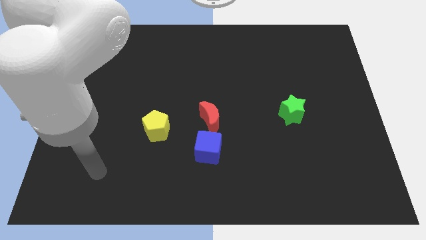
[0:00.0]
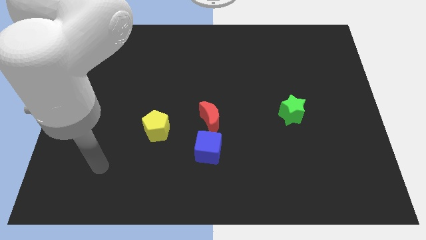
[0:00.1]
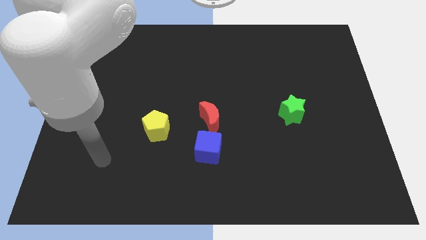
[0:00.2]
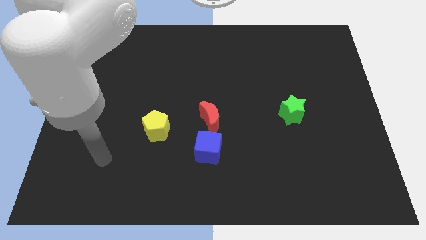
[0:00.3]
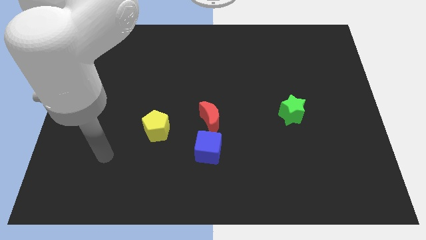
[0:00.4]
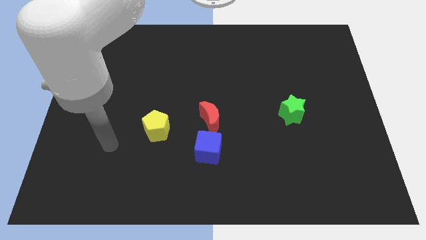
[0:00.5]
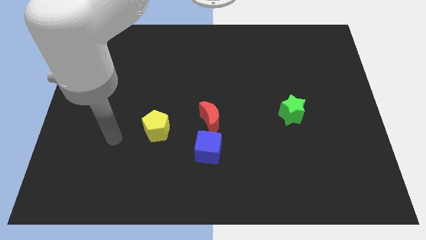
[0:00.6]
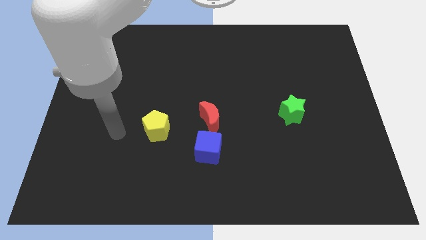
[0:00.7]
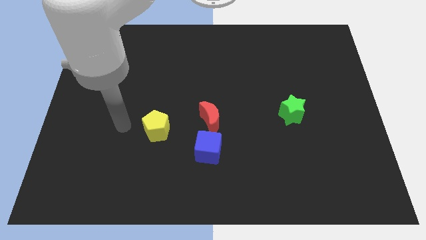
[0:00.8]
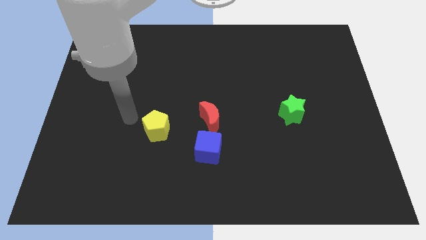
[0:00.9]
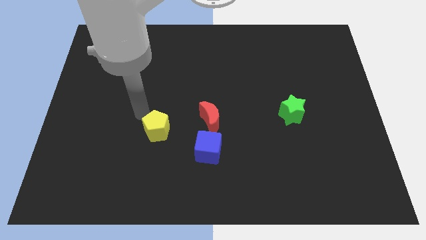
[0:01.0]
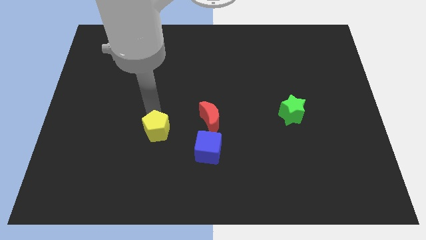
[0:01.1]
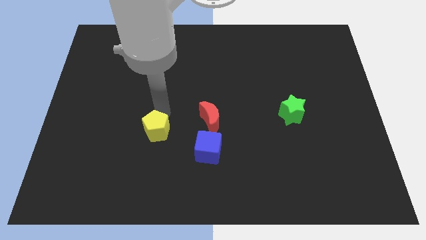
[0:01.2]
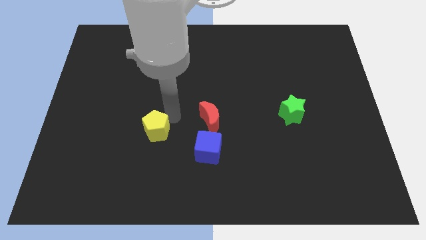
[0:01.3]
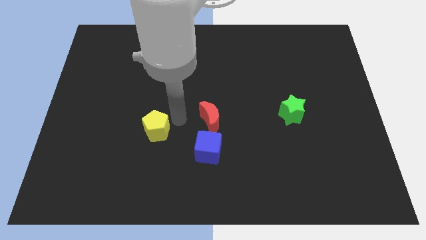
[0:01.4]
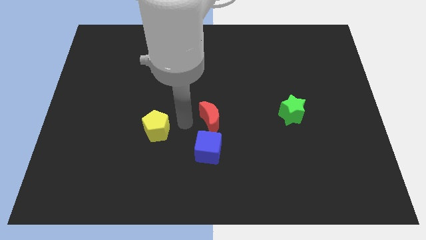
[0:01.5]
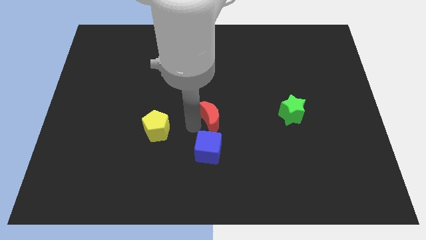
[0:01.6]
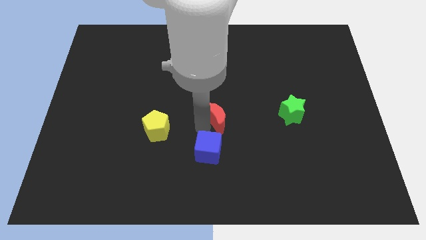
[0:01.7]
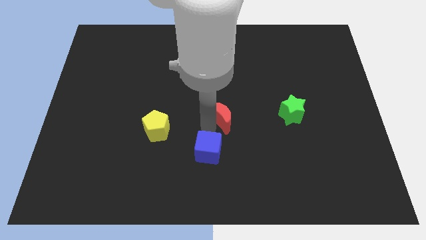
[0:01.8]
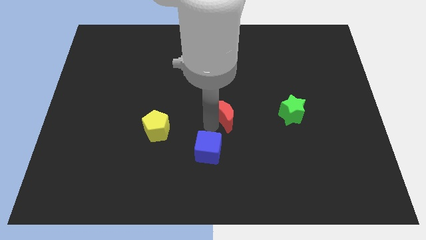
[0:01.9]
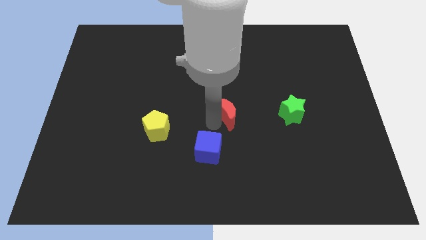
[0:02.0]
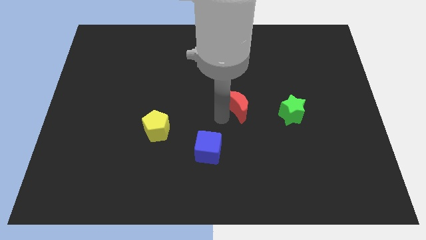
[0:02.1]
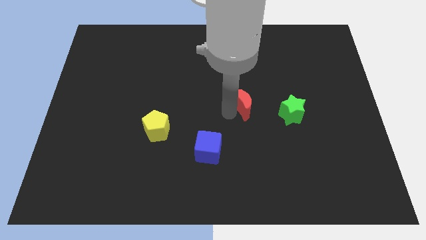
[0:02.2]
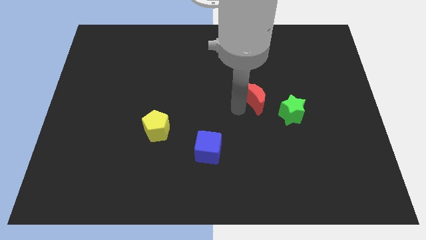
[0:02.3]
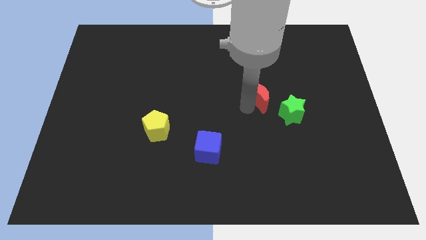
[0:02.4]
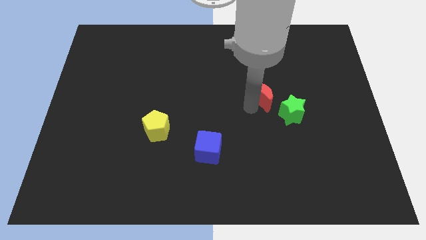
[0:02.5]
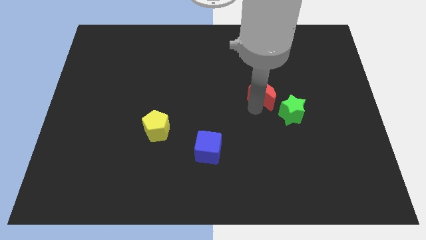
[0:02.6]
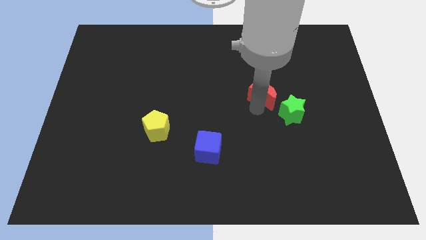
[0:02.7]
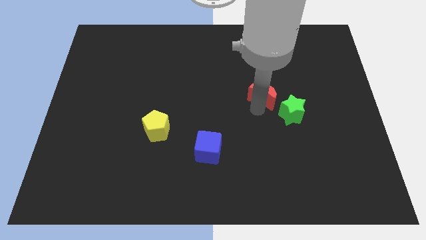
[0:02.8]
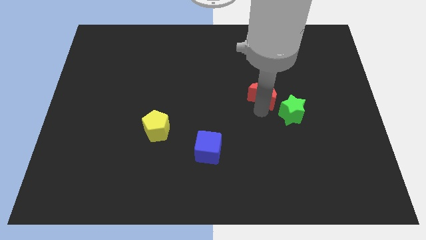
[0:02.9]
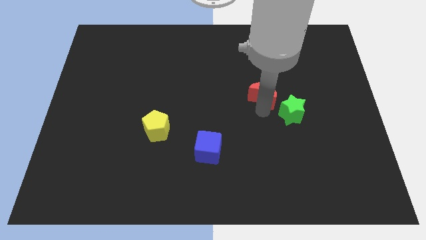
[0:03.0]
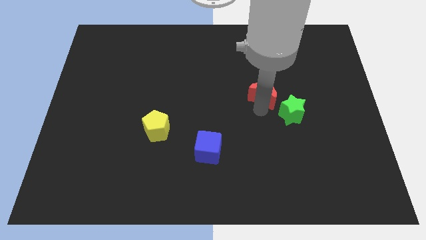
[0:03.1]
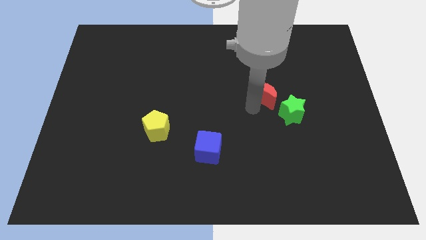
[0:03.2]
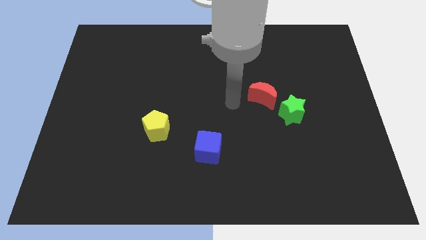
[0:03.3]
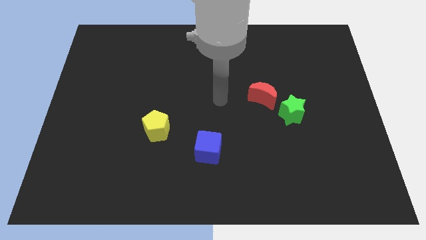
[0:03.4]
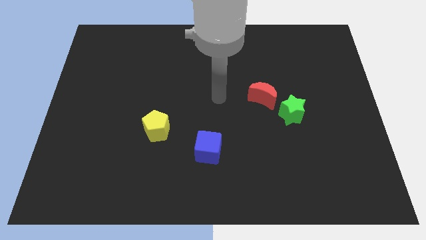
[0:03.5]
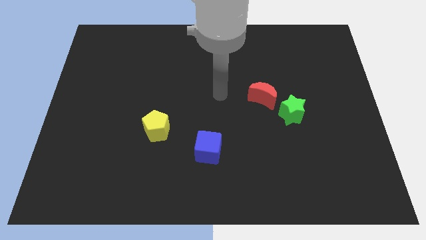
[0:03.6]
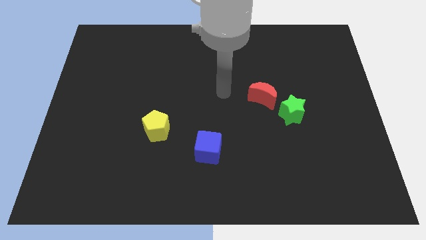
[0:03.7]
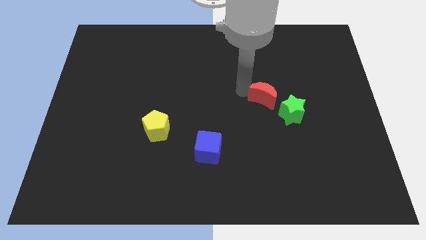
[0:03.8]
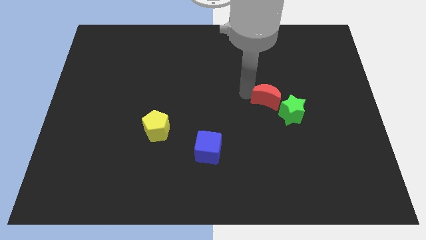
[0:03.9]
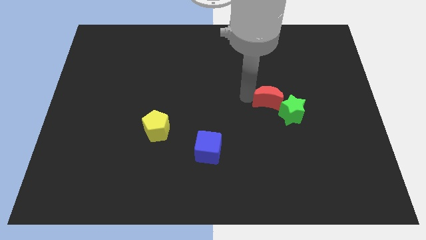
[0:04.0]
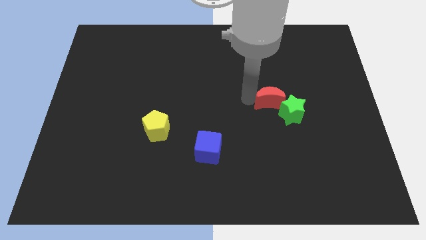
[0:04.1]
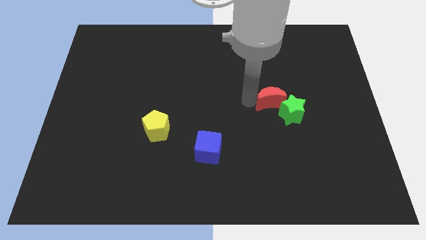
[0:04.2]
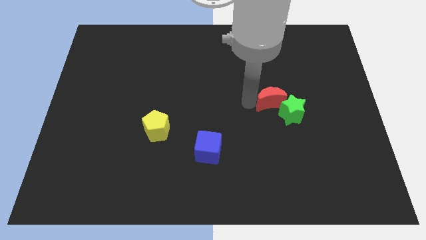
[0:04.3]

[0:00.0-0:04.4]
move the red block towards the green star

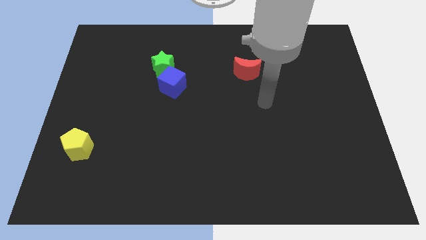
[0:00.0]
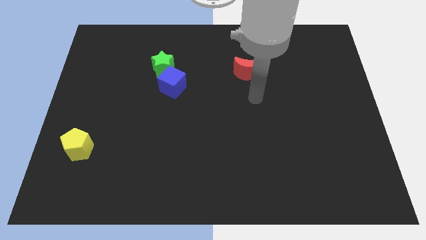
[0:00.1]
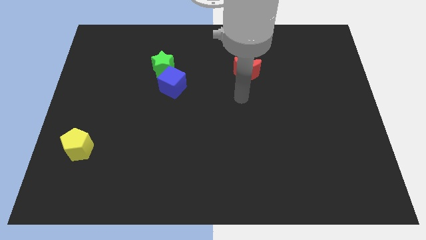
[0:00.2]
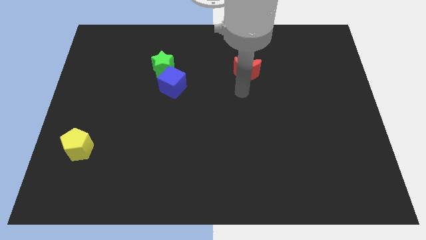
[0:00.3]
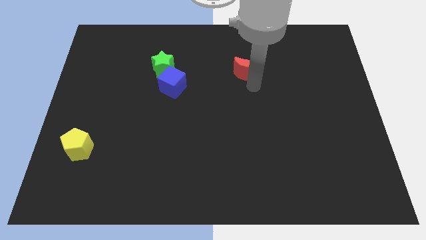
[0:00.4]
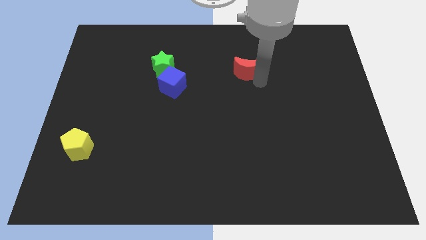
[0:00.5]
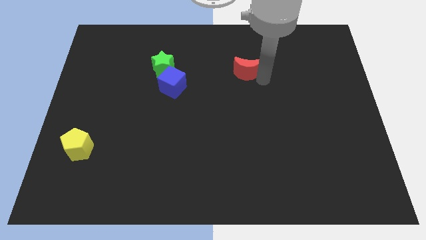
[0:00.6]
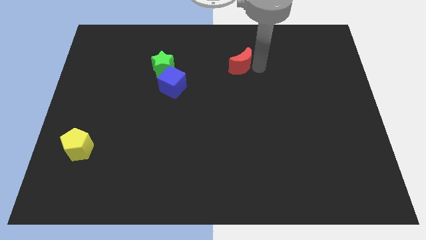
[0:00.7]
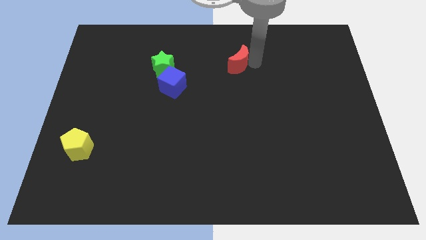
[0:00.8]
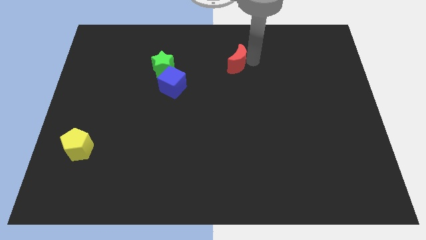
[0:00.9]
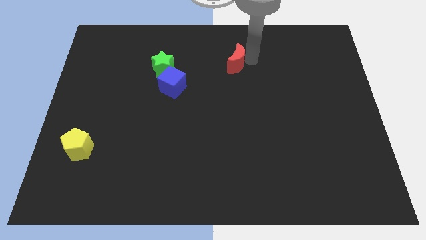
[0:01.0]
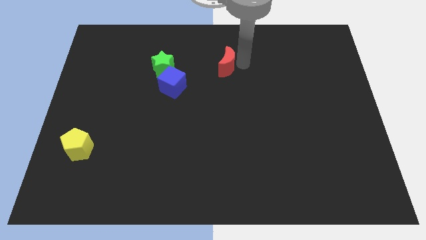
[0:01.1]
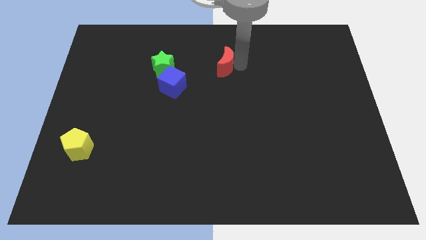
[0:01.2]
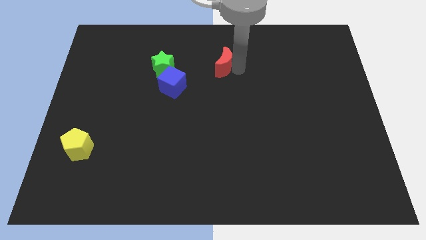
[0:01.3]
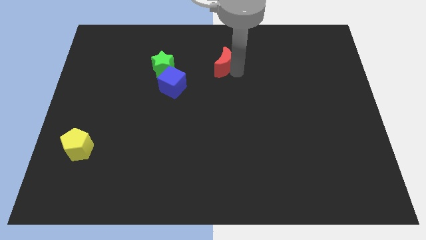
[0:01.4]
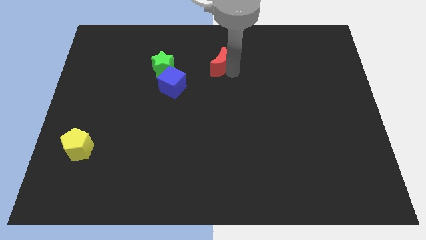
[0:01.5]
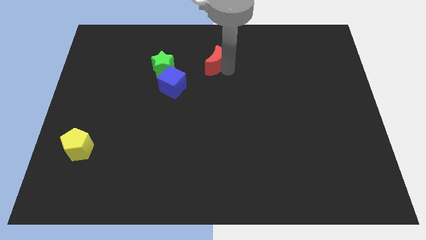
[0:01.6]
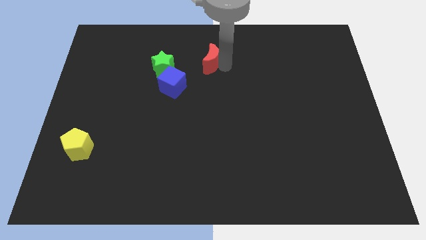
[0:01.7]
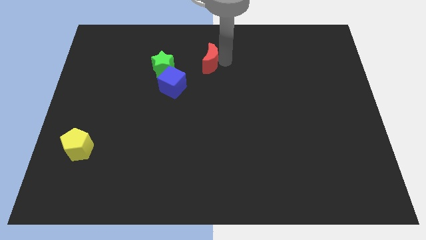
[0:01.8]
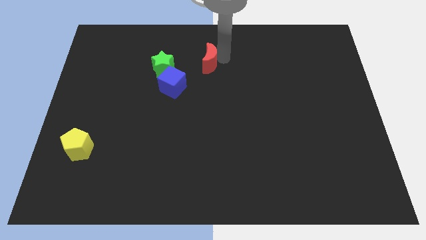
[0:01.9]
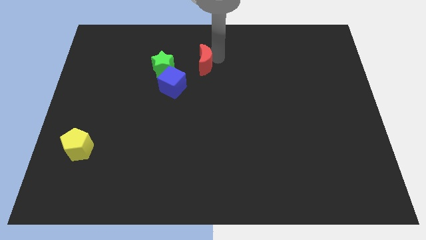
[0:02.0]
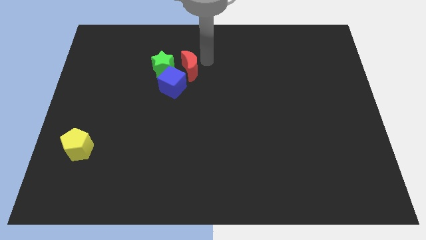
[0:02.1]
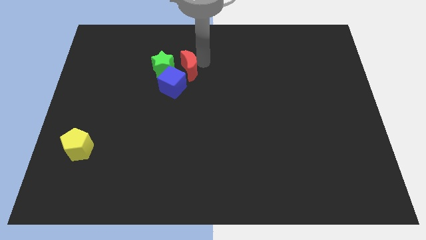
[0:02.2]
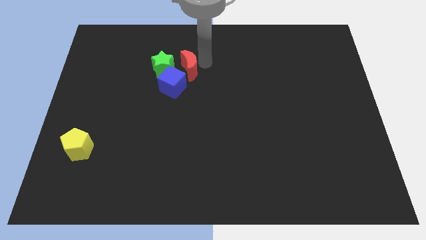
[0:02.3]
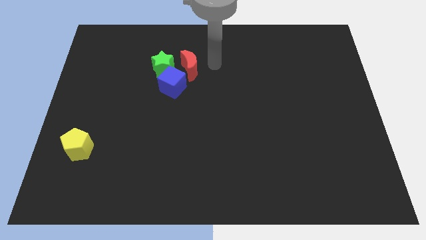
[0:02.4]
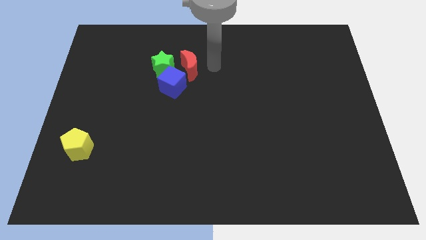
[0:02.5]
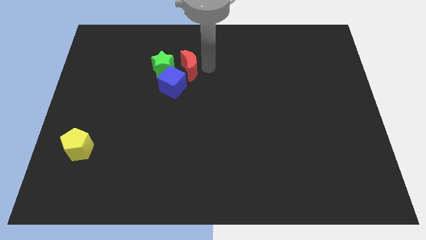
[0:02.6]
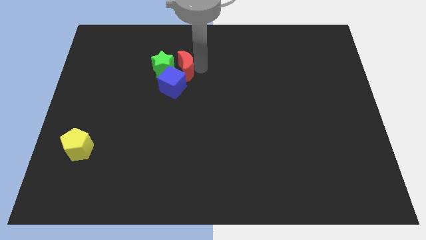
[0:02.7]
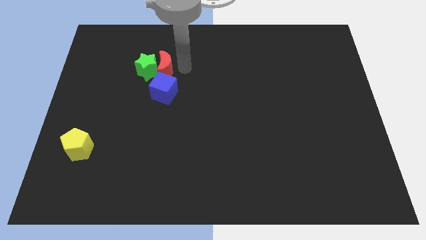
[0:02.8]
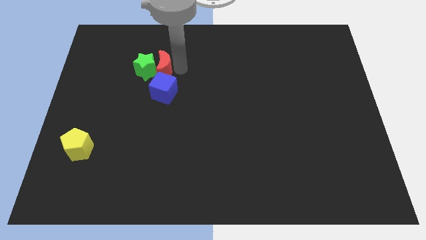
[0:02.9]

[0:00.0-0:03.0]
push the moon towards the star

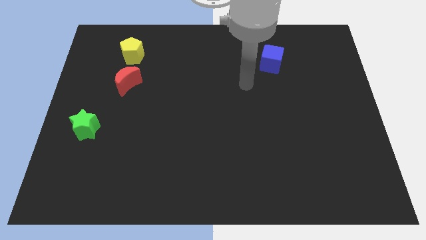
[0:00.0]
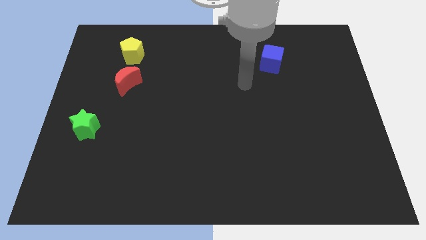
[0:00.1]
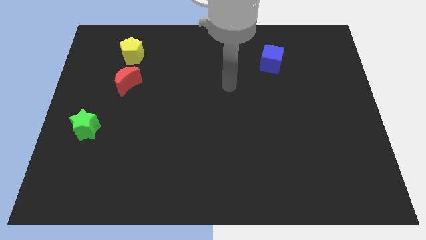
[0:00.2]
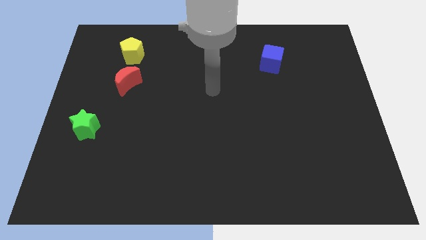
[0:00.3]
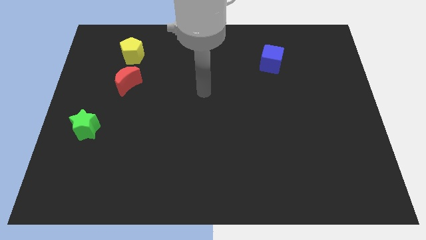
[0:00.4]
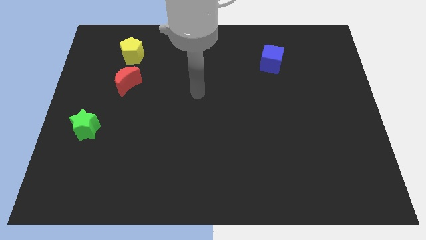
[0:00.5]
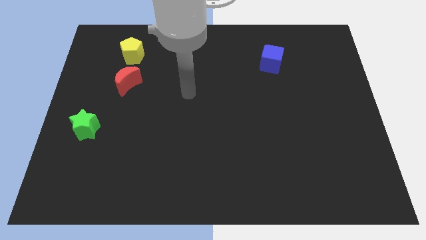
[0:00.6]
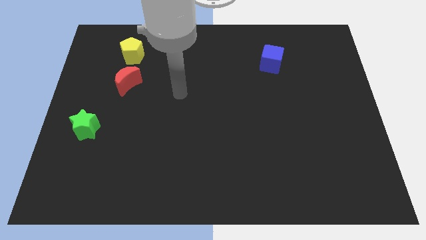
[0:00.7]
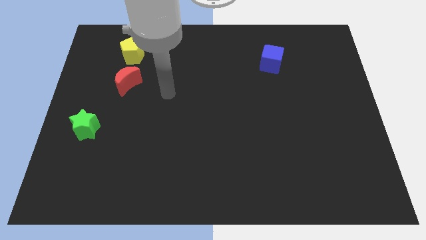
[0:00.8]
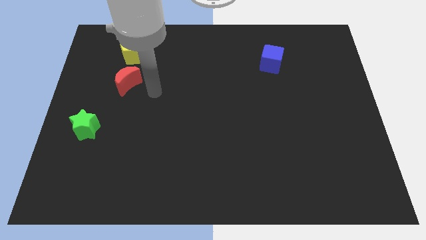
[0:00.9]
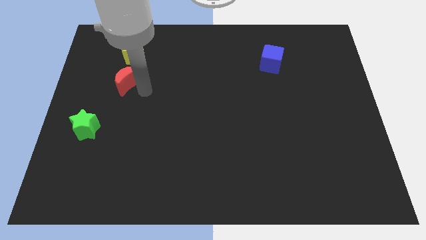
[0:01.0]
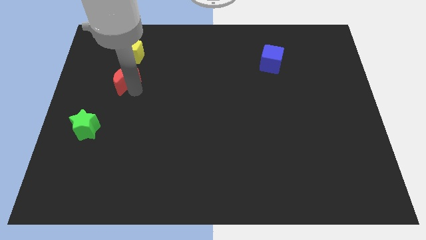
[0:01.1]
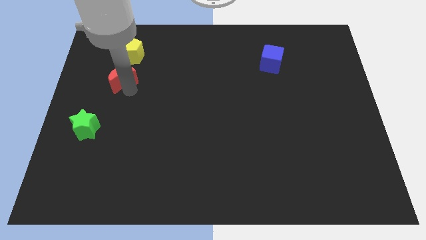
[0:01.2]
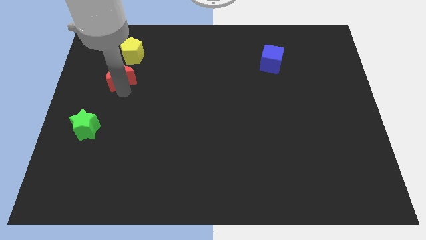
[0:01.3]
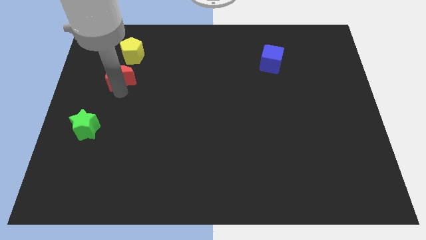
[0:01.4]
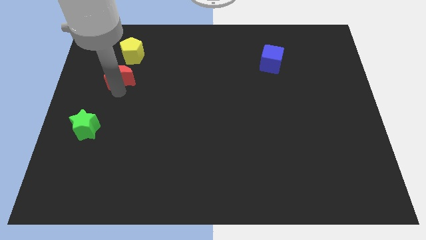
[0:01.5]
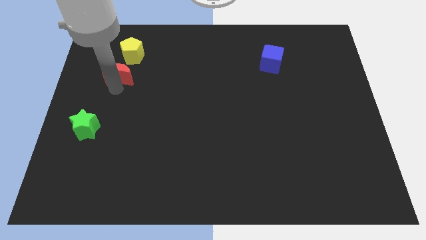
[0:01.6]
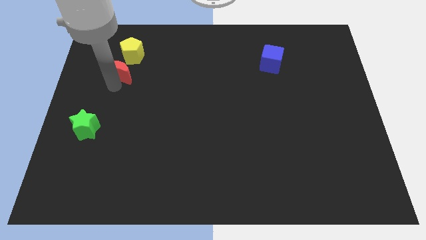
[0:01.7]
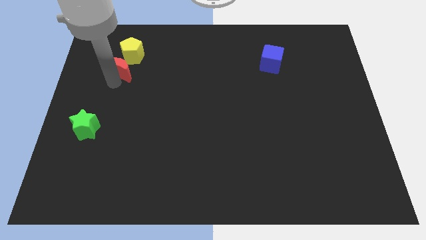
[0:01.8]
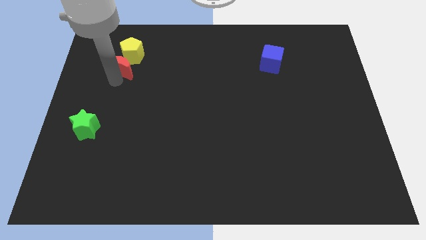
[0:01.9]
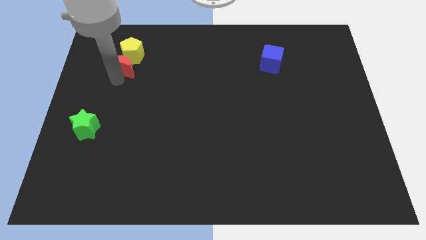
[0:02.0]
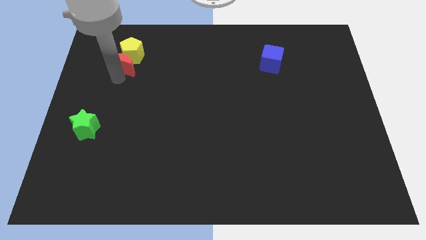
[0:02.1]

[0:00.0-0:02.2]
put the red moon next to the yellow block
